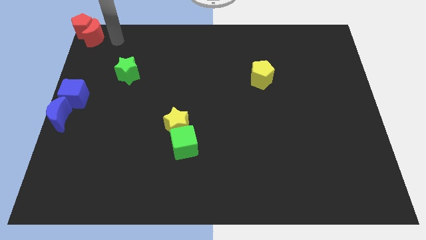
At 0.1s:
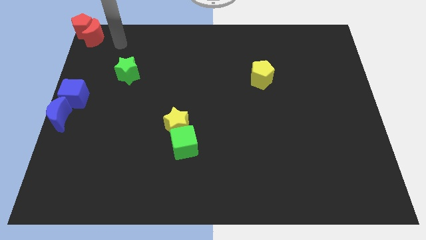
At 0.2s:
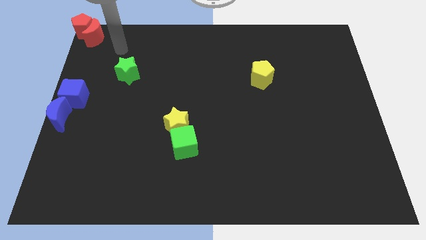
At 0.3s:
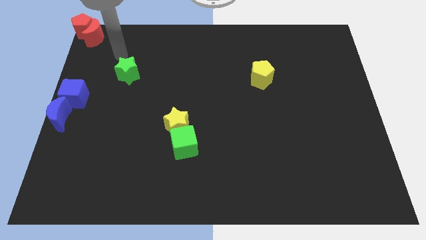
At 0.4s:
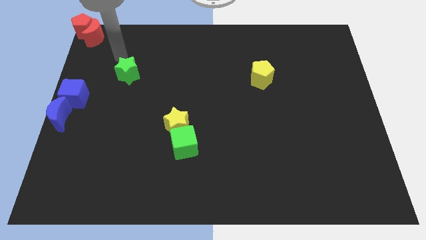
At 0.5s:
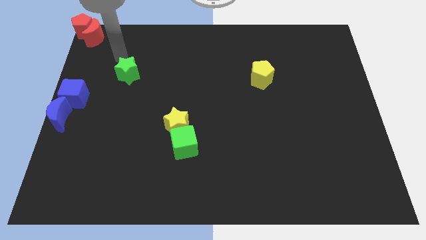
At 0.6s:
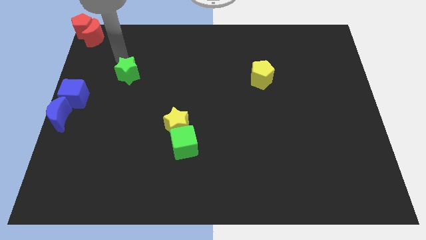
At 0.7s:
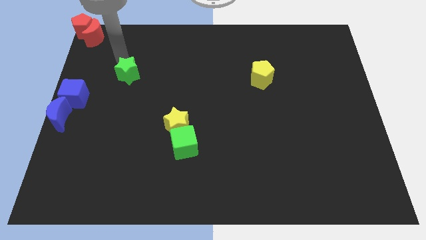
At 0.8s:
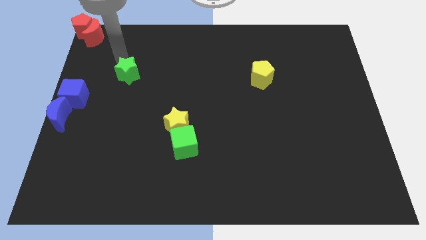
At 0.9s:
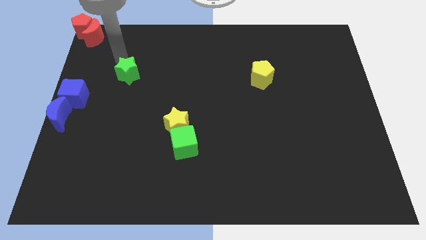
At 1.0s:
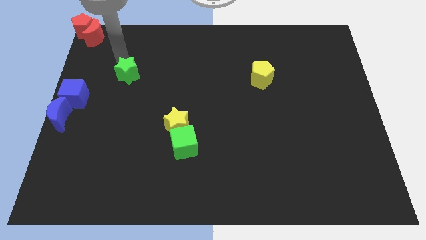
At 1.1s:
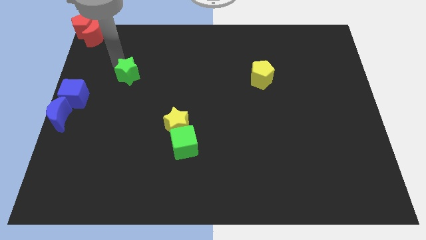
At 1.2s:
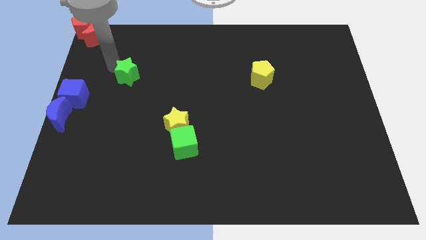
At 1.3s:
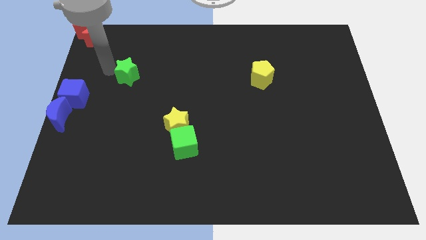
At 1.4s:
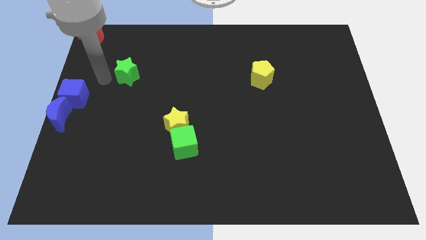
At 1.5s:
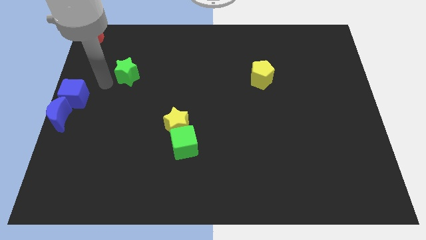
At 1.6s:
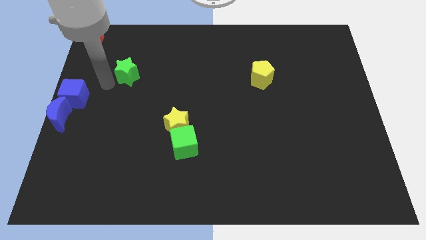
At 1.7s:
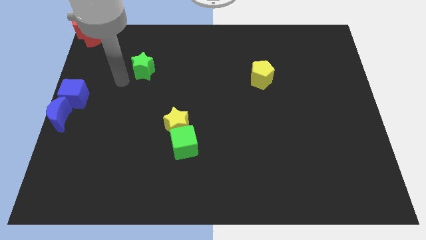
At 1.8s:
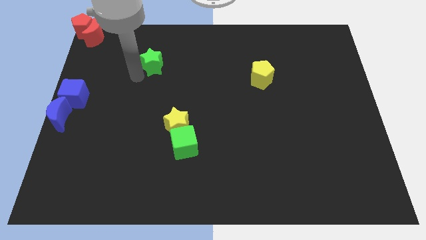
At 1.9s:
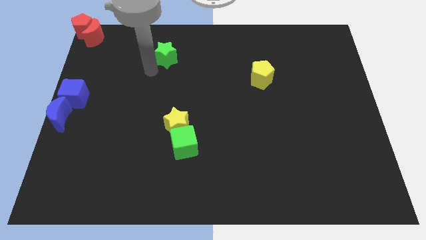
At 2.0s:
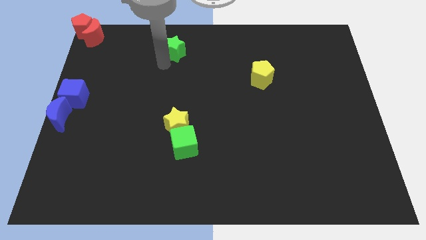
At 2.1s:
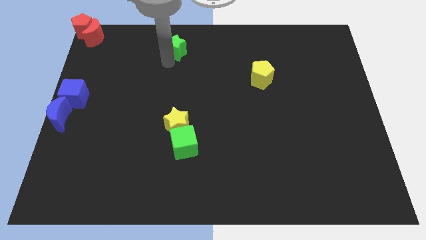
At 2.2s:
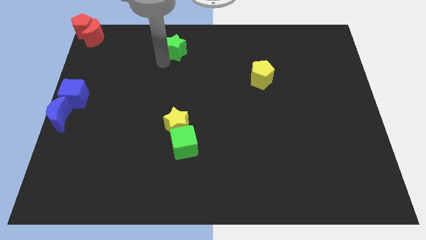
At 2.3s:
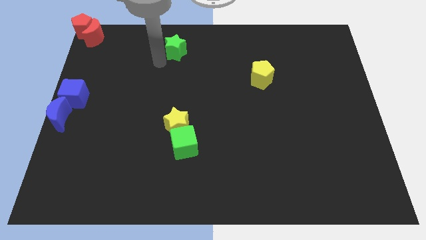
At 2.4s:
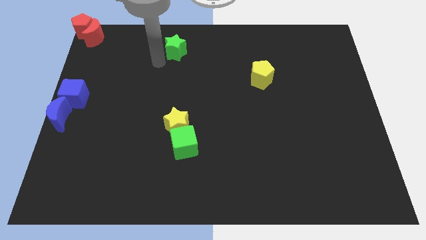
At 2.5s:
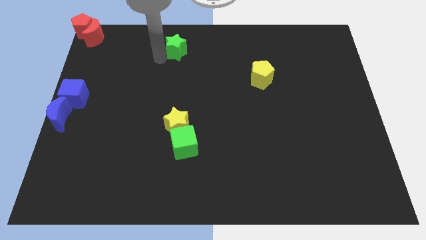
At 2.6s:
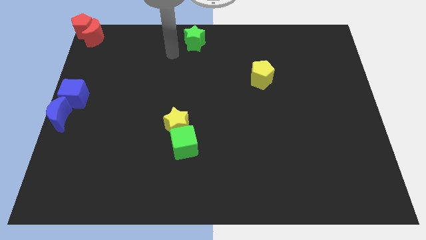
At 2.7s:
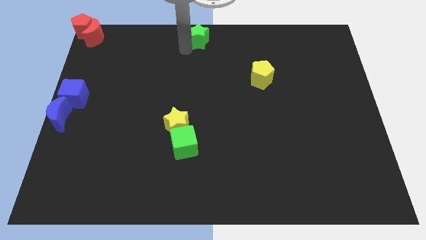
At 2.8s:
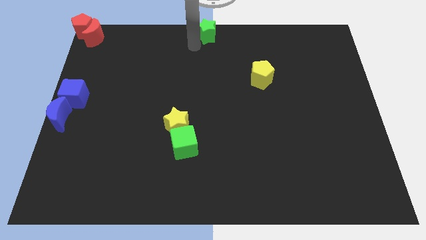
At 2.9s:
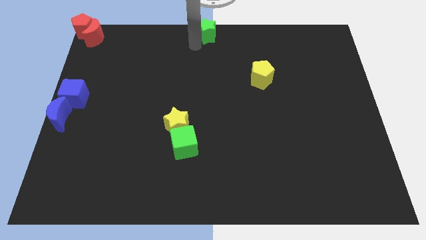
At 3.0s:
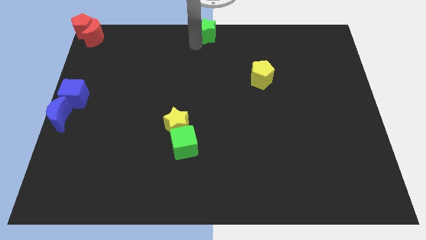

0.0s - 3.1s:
place green star in the top center

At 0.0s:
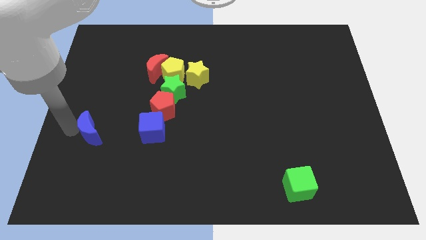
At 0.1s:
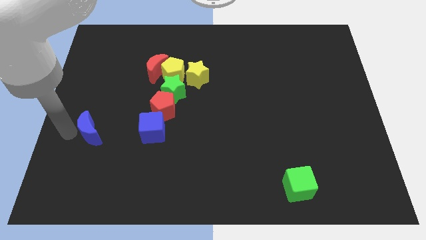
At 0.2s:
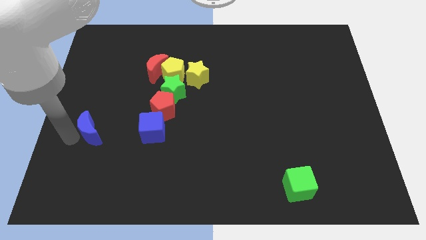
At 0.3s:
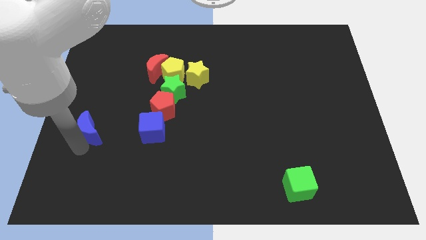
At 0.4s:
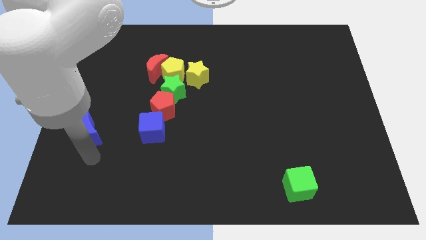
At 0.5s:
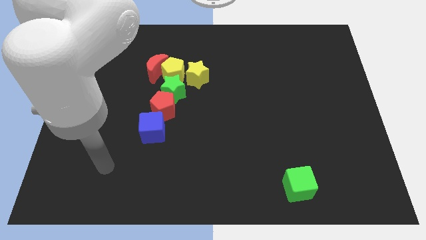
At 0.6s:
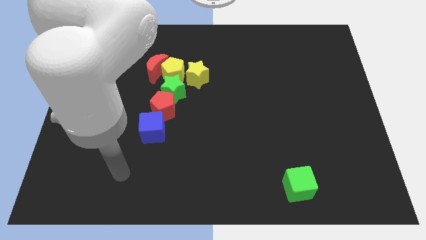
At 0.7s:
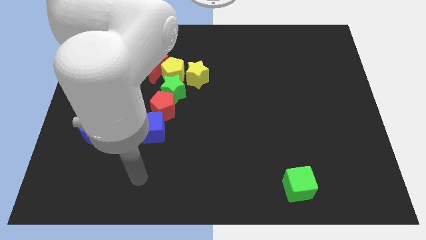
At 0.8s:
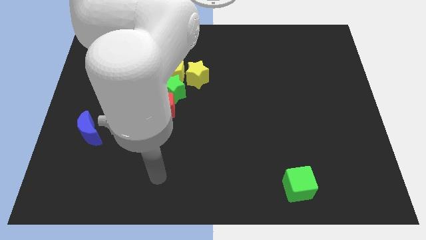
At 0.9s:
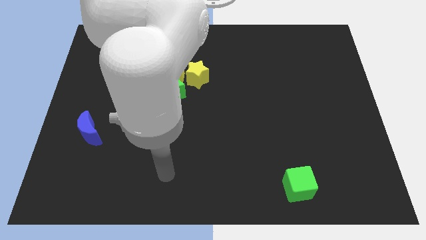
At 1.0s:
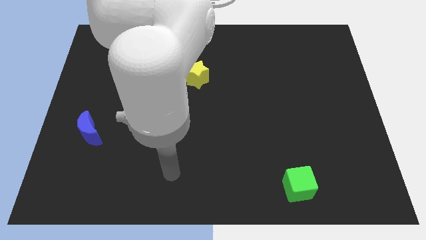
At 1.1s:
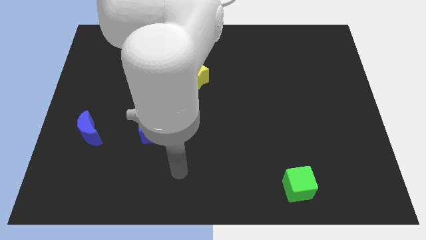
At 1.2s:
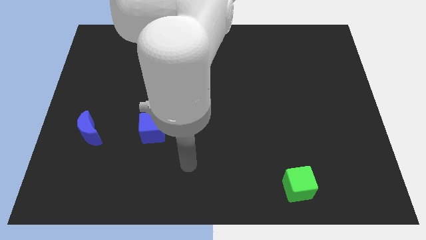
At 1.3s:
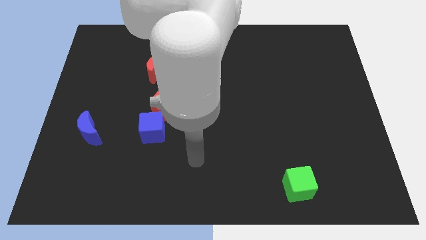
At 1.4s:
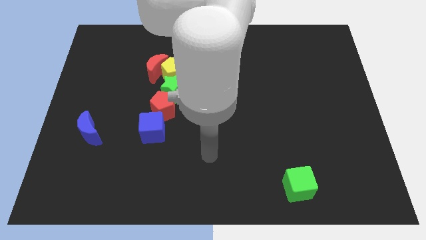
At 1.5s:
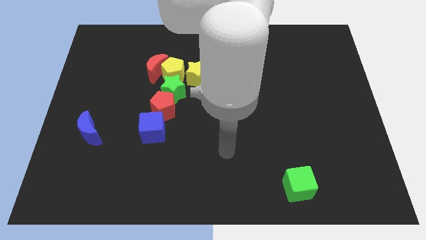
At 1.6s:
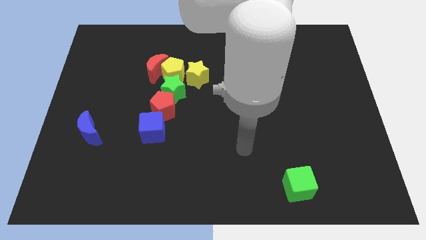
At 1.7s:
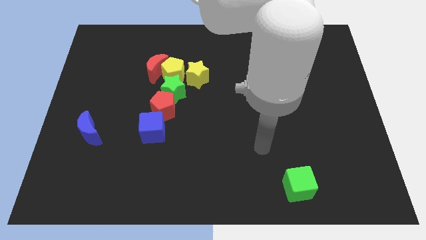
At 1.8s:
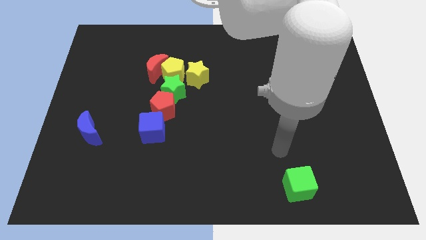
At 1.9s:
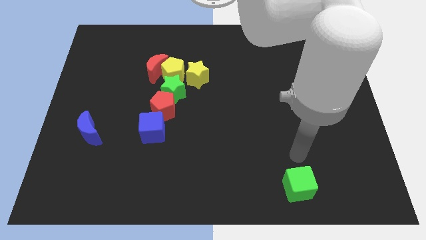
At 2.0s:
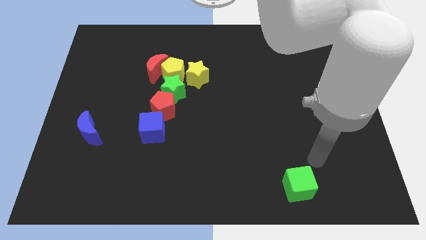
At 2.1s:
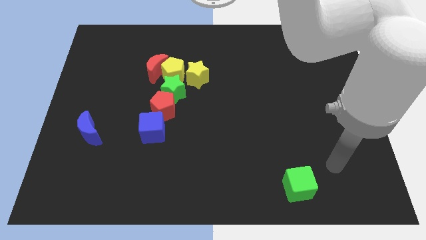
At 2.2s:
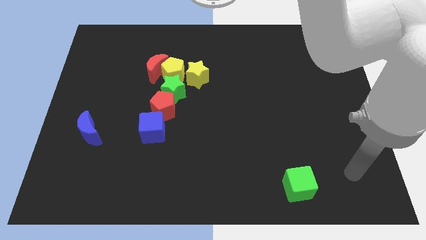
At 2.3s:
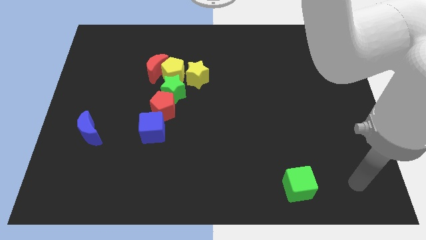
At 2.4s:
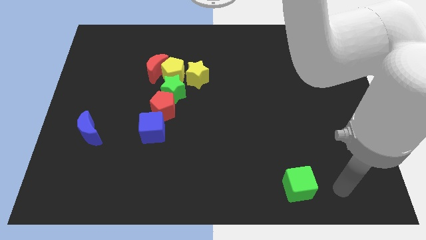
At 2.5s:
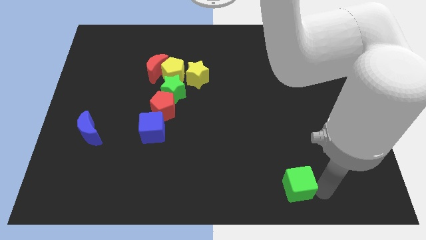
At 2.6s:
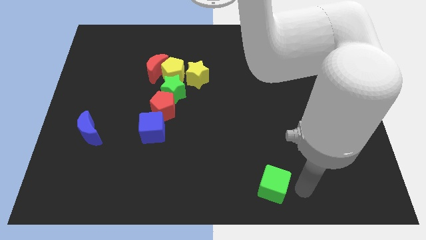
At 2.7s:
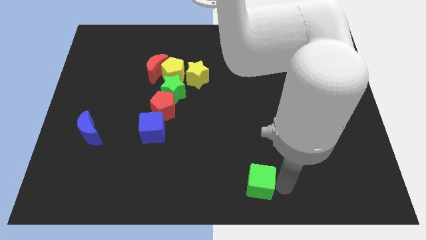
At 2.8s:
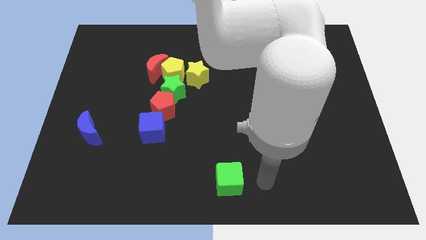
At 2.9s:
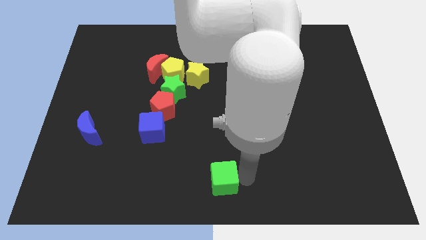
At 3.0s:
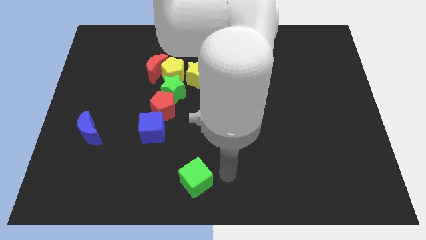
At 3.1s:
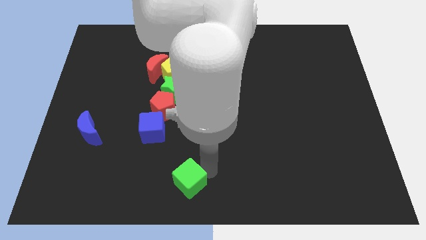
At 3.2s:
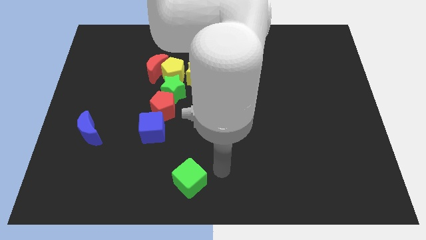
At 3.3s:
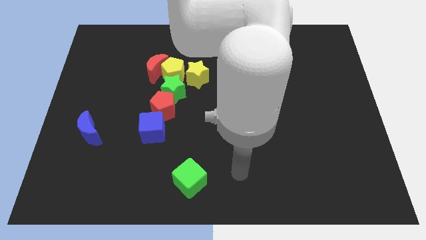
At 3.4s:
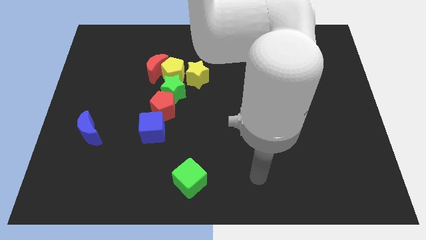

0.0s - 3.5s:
move the green cube to the left of the board

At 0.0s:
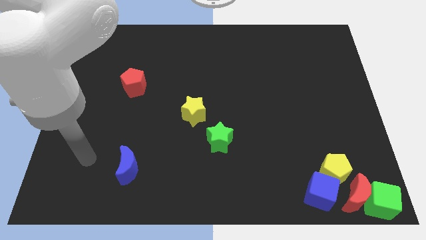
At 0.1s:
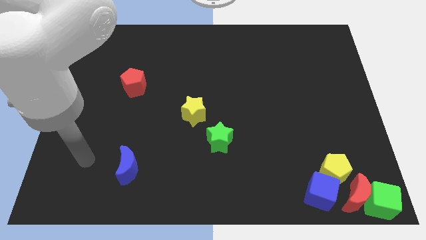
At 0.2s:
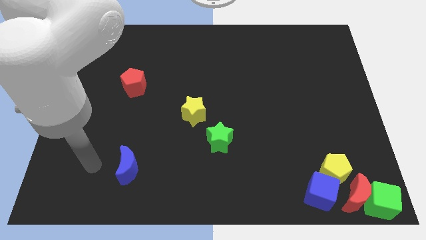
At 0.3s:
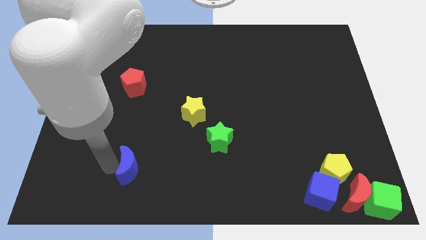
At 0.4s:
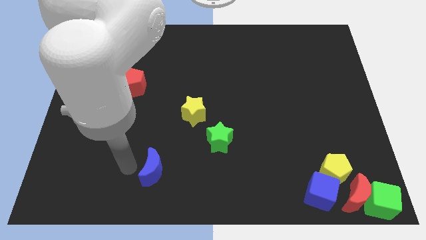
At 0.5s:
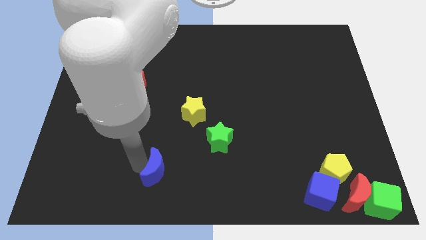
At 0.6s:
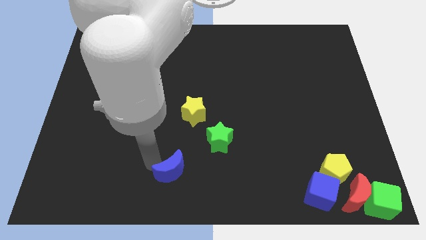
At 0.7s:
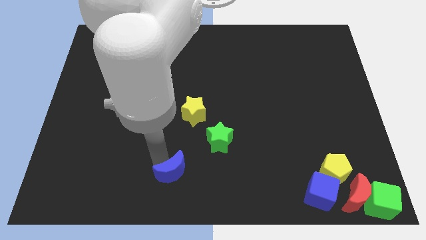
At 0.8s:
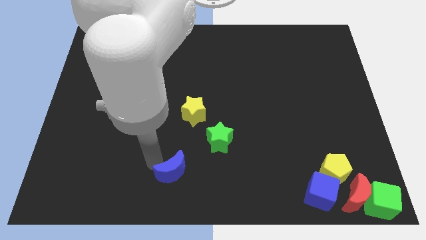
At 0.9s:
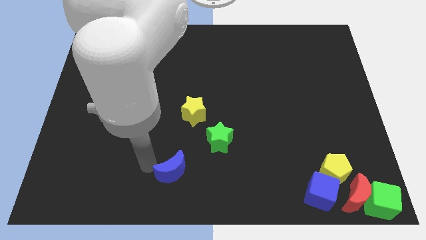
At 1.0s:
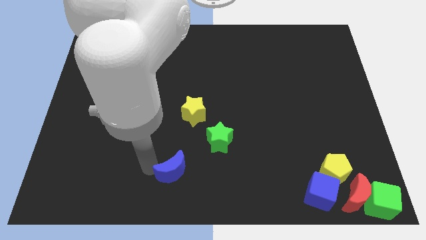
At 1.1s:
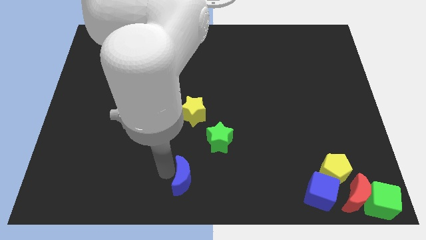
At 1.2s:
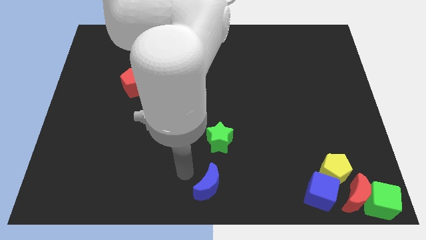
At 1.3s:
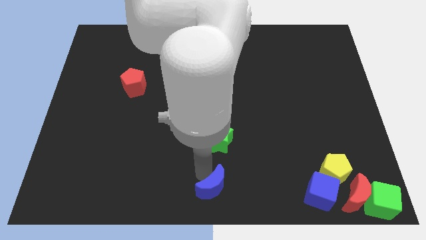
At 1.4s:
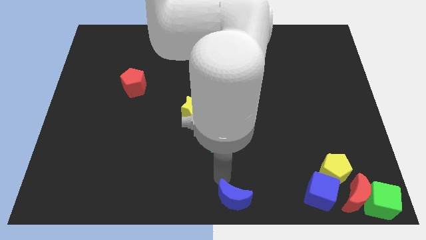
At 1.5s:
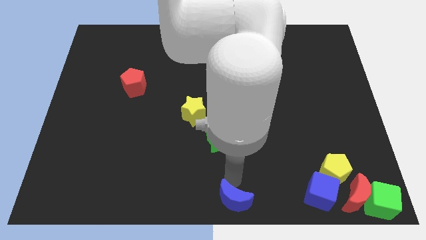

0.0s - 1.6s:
move the blue moon horizontally left to the blue cube

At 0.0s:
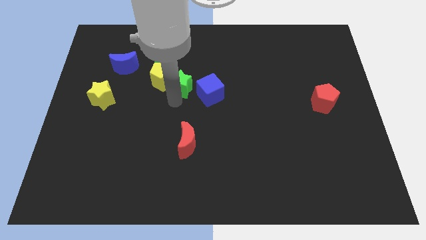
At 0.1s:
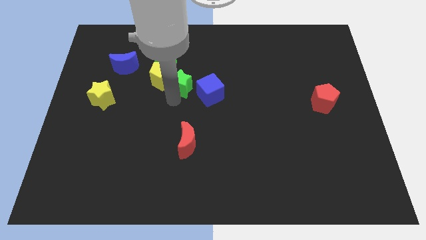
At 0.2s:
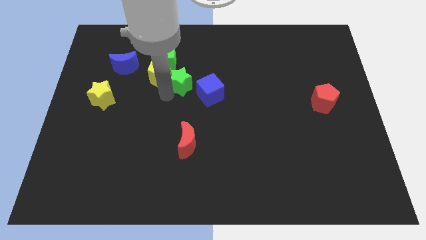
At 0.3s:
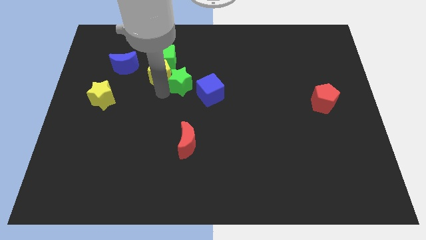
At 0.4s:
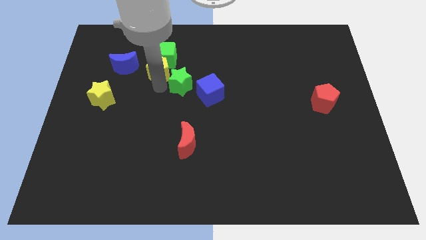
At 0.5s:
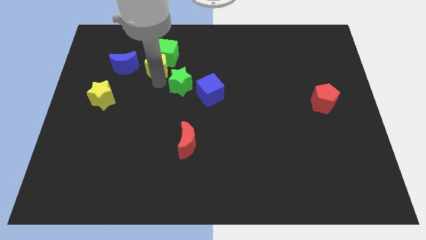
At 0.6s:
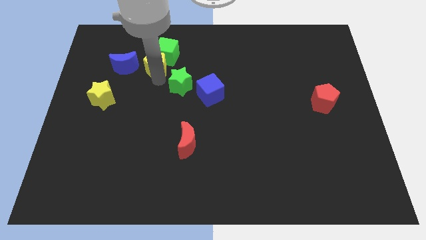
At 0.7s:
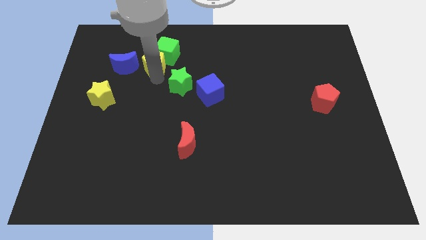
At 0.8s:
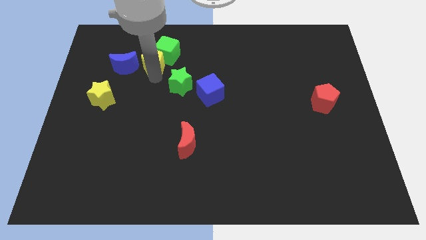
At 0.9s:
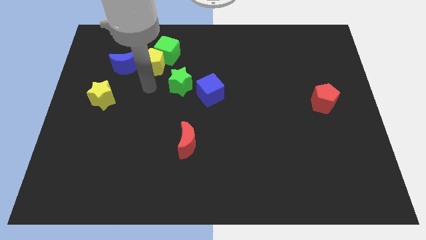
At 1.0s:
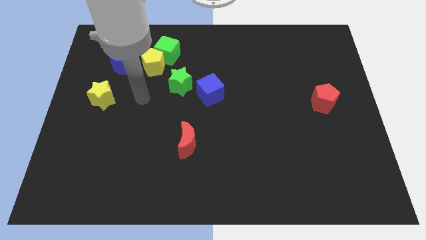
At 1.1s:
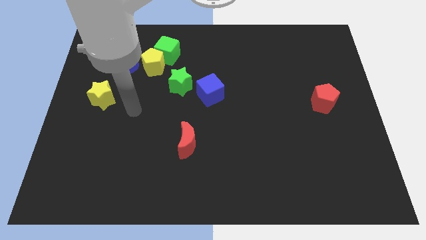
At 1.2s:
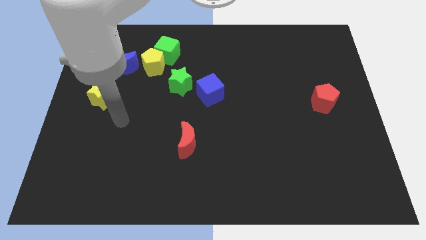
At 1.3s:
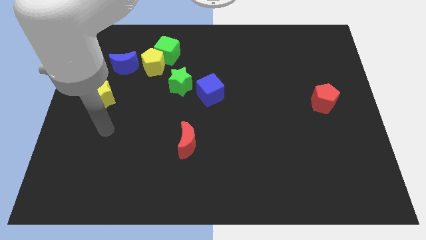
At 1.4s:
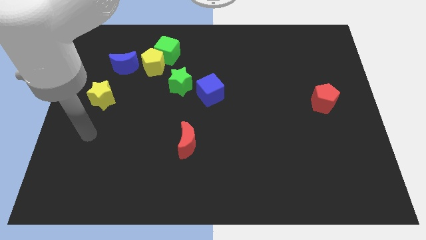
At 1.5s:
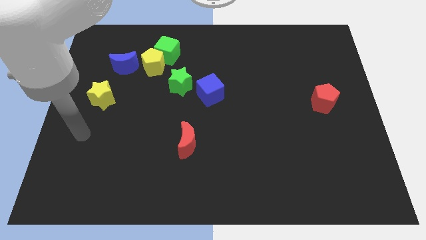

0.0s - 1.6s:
push the yellow pentagon between green cube and blue moon
